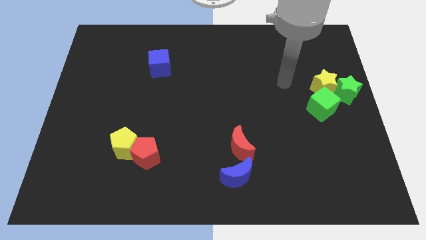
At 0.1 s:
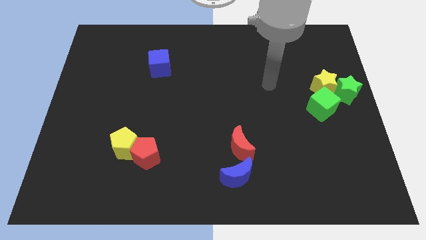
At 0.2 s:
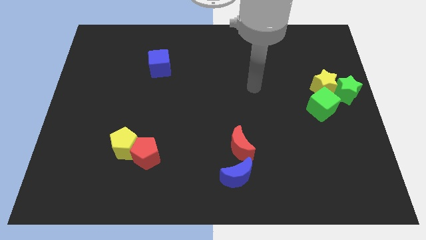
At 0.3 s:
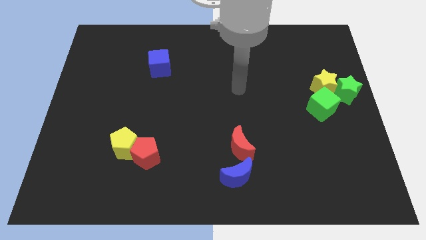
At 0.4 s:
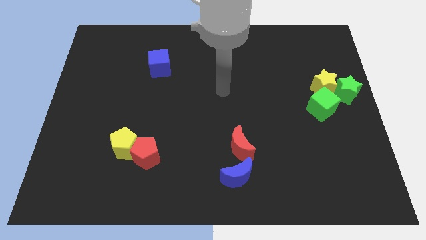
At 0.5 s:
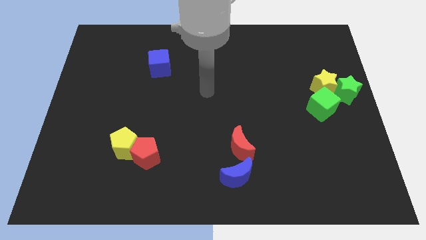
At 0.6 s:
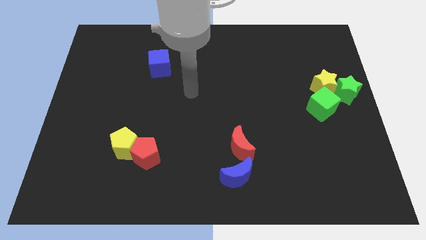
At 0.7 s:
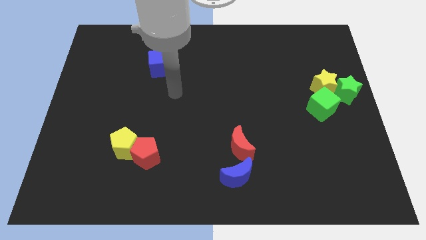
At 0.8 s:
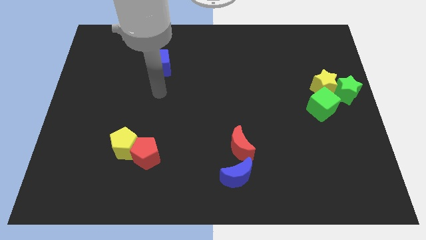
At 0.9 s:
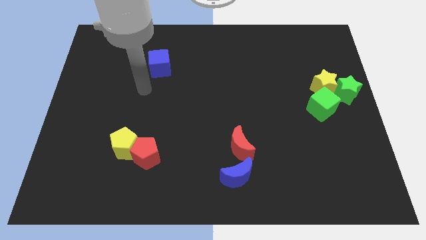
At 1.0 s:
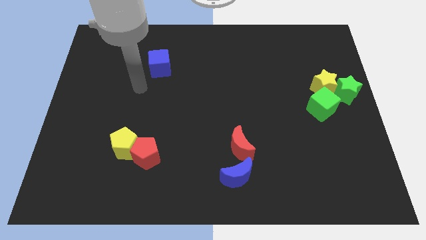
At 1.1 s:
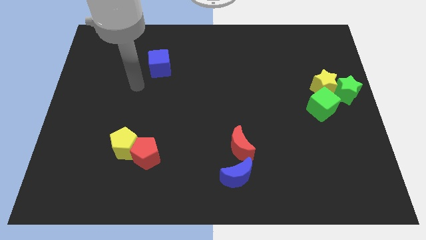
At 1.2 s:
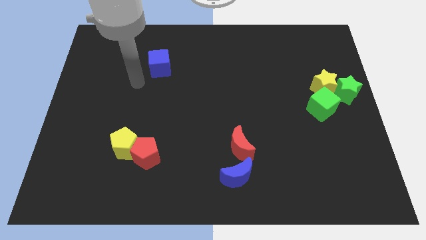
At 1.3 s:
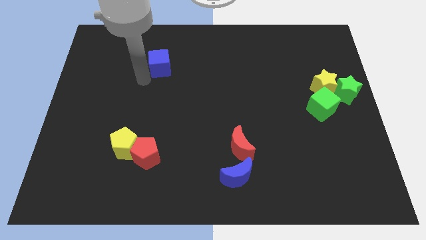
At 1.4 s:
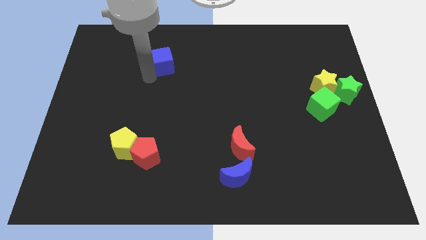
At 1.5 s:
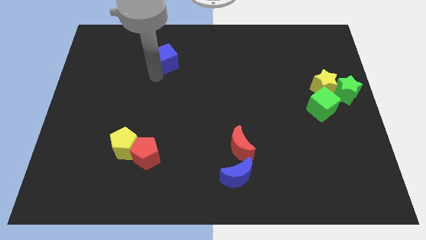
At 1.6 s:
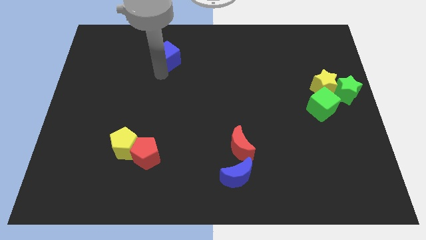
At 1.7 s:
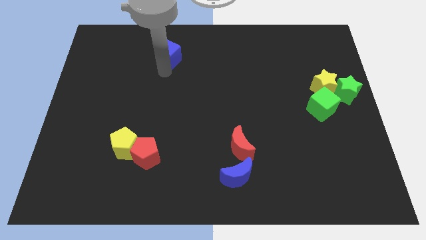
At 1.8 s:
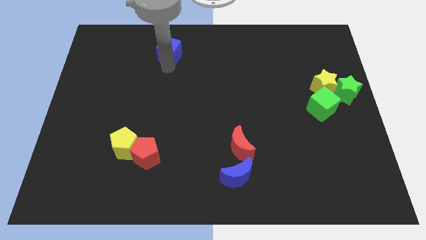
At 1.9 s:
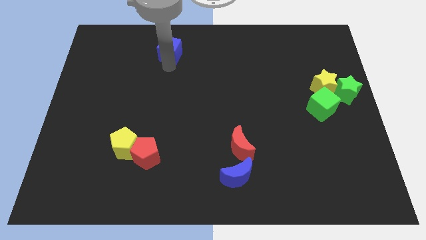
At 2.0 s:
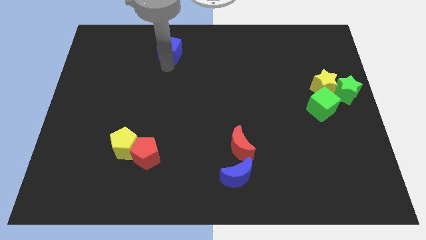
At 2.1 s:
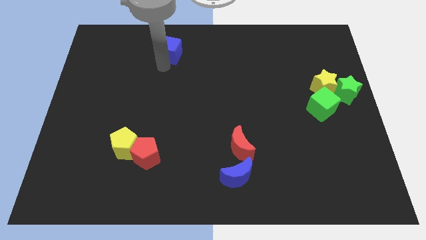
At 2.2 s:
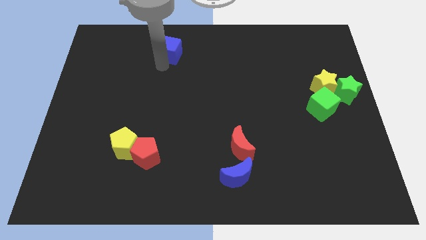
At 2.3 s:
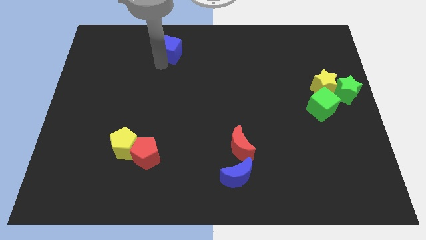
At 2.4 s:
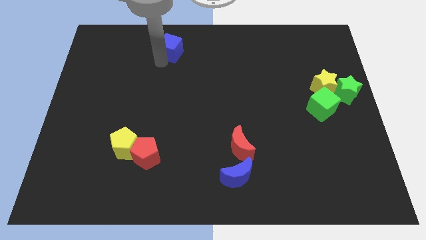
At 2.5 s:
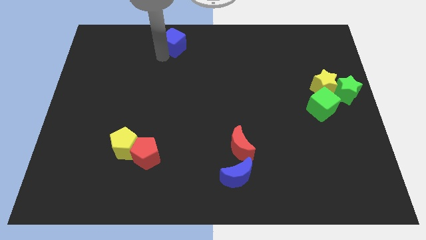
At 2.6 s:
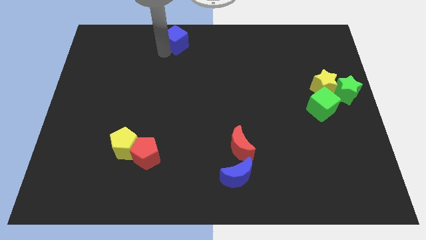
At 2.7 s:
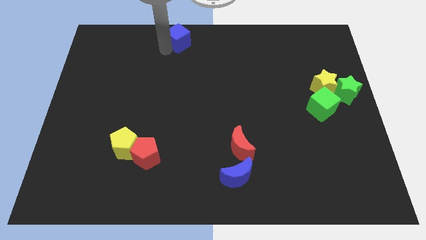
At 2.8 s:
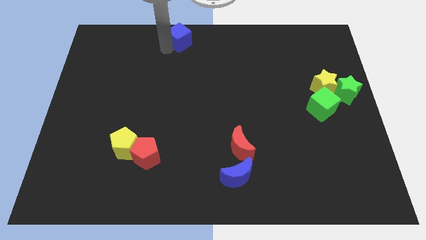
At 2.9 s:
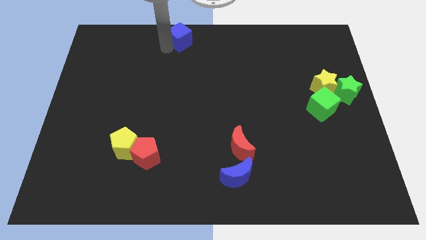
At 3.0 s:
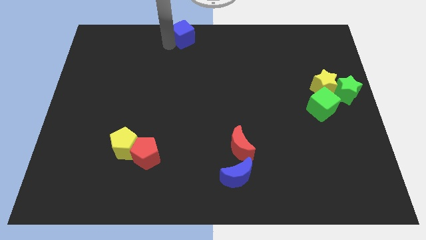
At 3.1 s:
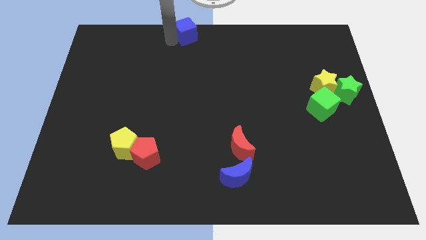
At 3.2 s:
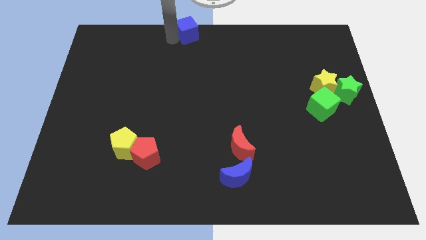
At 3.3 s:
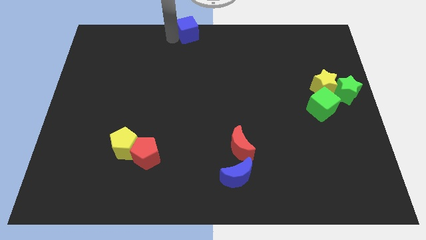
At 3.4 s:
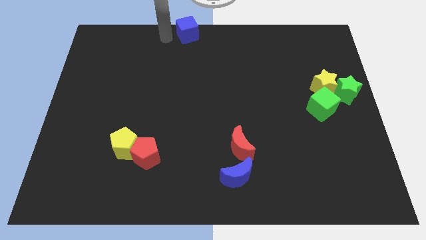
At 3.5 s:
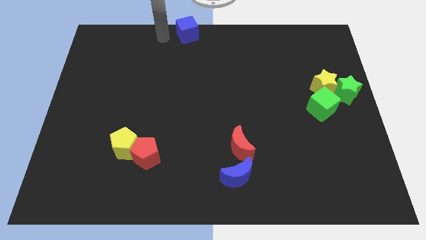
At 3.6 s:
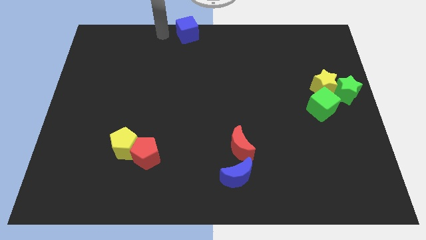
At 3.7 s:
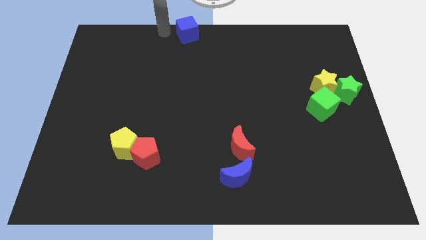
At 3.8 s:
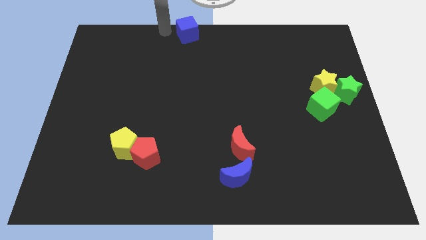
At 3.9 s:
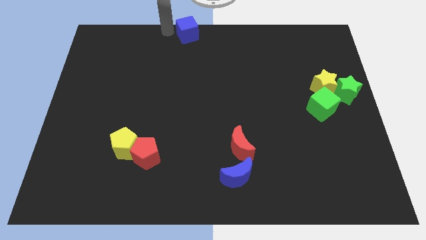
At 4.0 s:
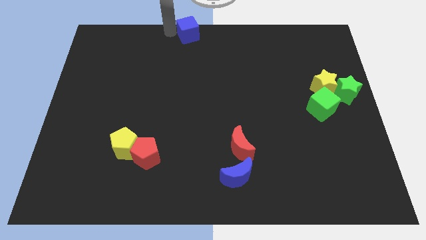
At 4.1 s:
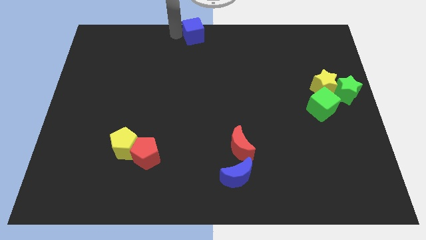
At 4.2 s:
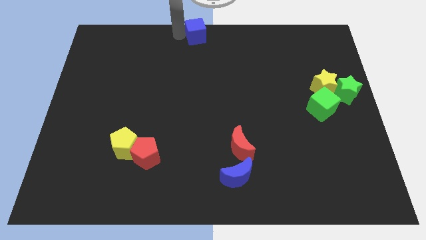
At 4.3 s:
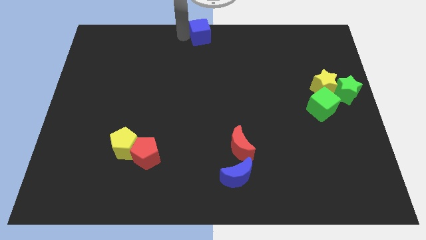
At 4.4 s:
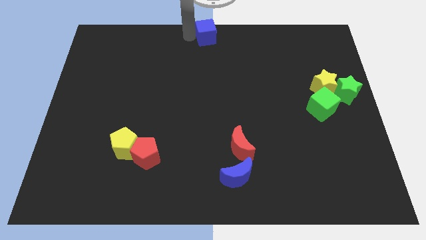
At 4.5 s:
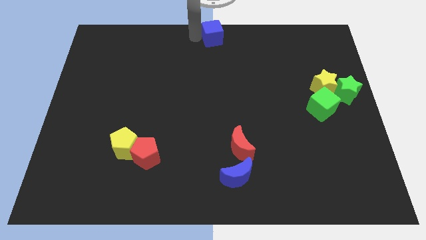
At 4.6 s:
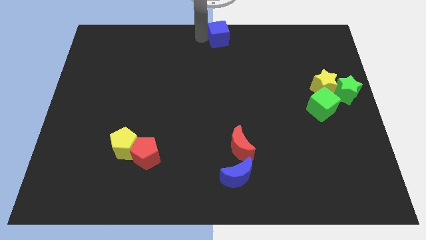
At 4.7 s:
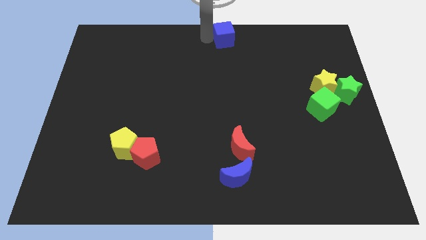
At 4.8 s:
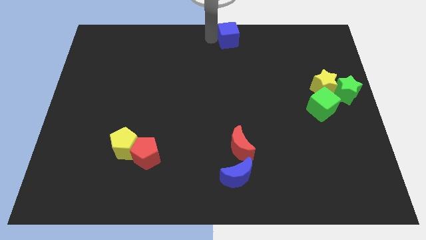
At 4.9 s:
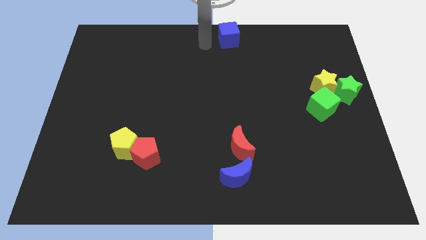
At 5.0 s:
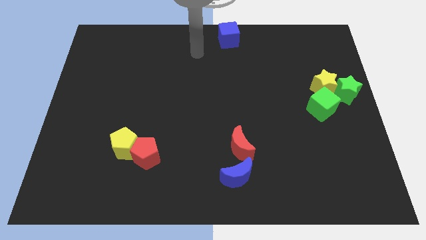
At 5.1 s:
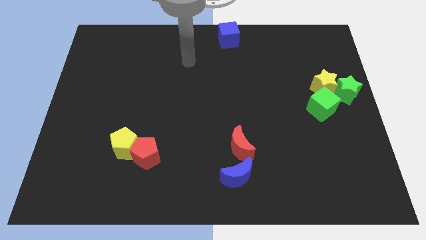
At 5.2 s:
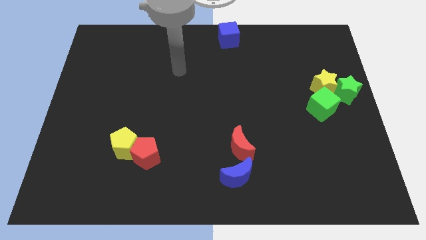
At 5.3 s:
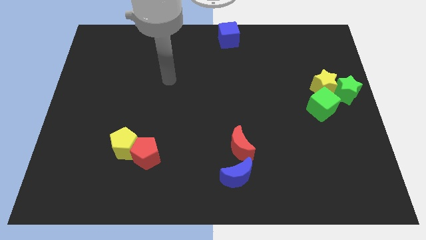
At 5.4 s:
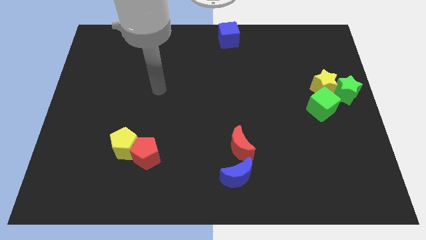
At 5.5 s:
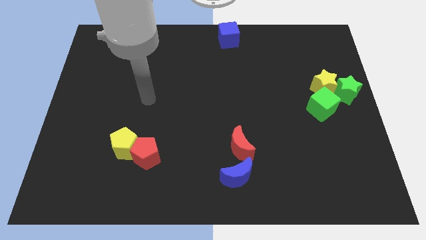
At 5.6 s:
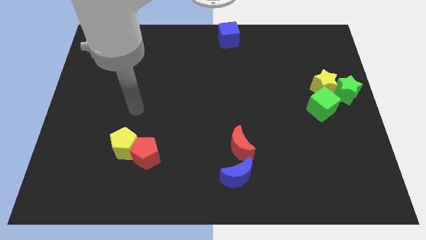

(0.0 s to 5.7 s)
place the blue cube at the top center of the board

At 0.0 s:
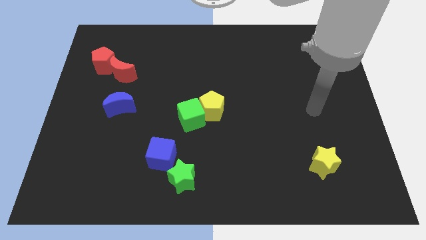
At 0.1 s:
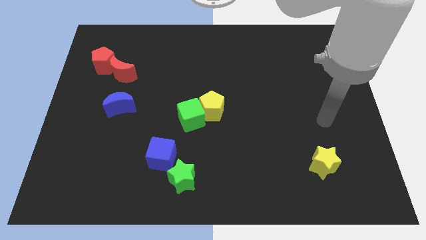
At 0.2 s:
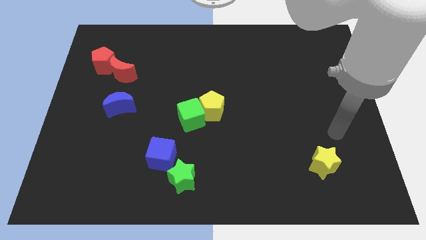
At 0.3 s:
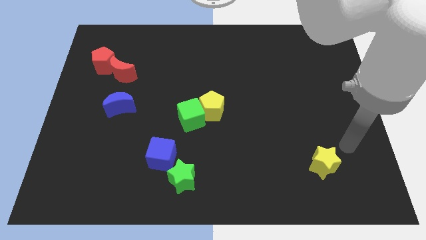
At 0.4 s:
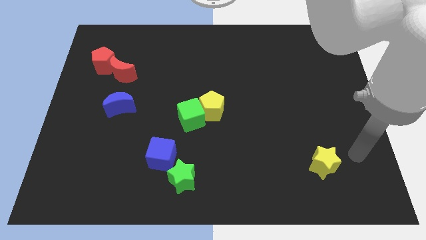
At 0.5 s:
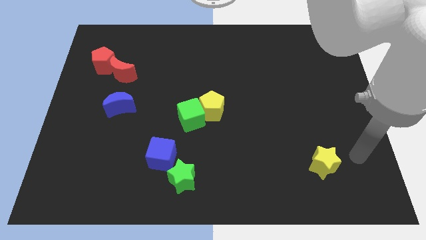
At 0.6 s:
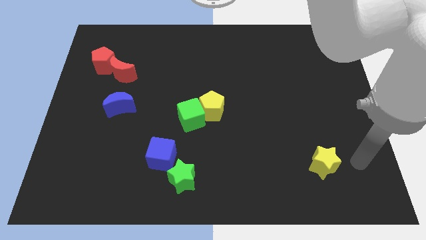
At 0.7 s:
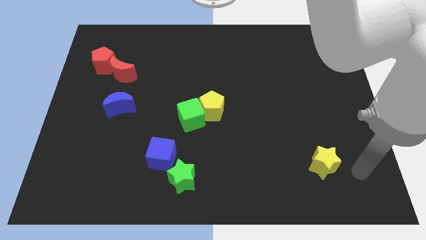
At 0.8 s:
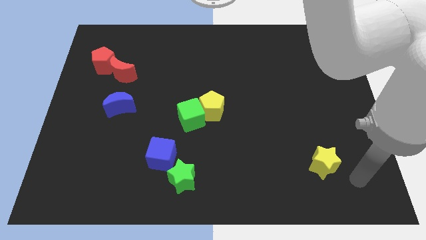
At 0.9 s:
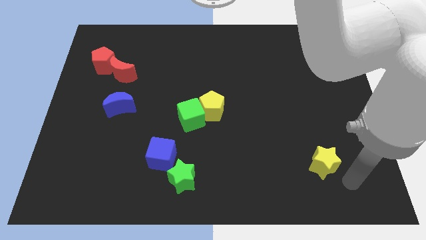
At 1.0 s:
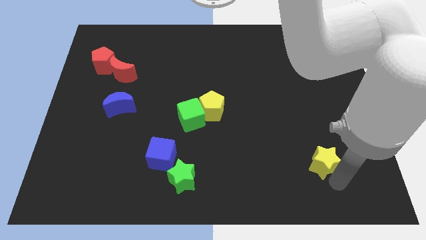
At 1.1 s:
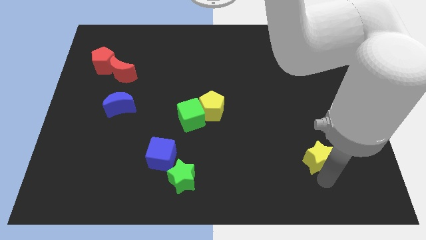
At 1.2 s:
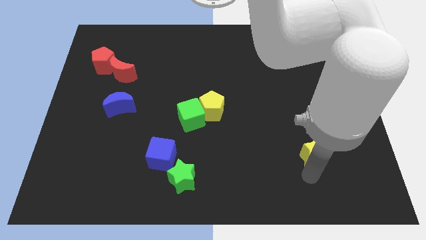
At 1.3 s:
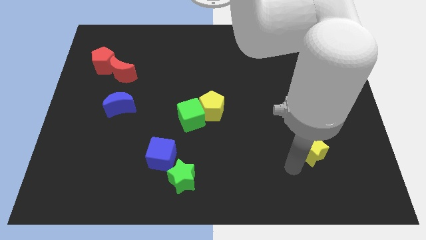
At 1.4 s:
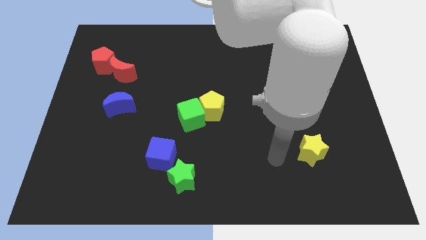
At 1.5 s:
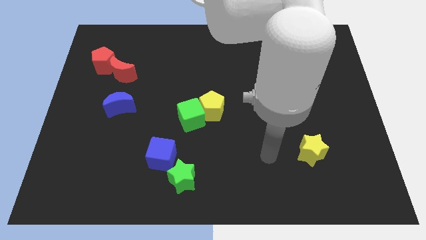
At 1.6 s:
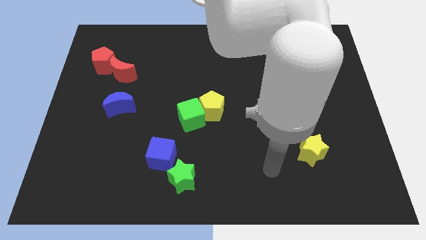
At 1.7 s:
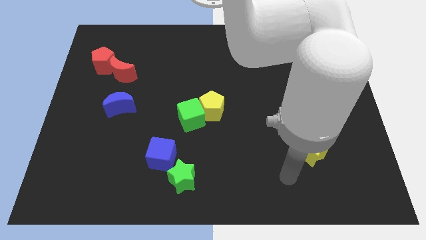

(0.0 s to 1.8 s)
move the yellow star slightly up

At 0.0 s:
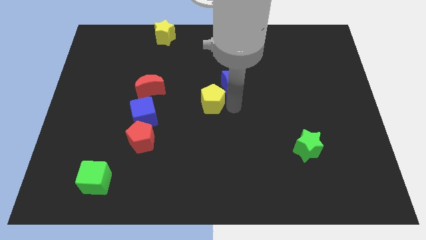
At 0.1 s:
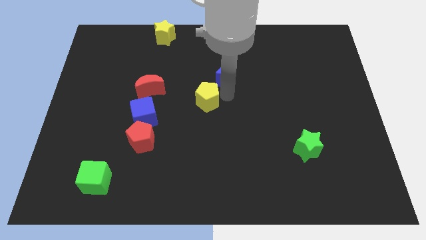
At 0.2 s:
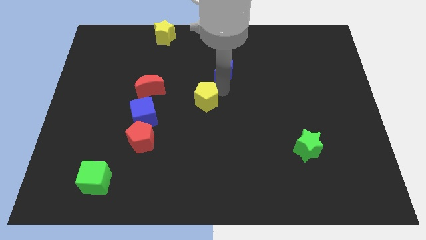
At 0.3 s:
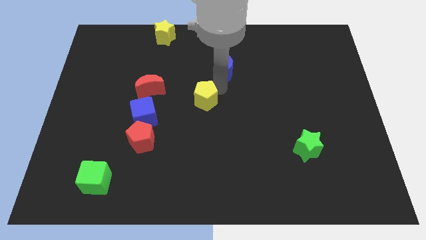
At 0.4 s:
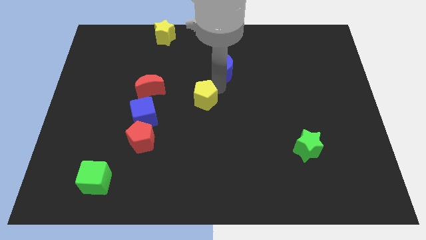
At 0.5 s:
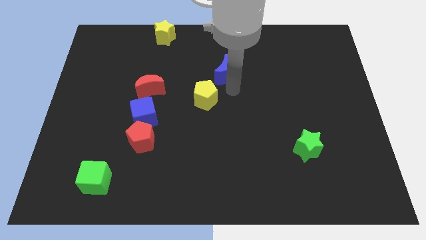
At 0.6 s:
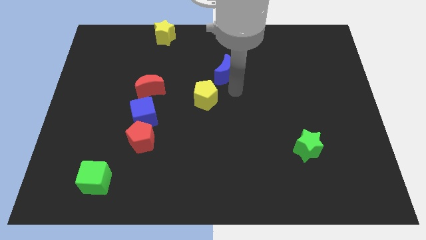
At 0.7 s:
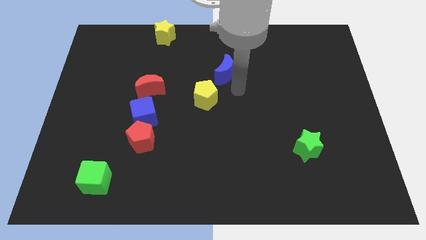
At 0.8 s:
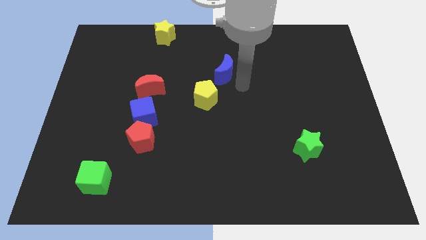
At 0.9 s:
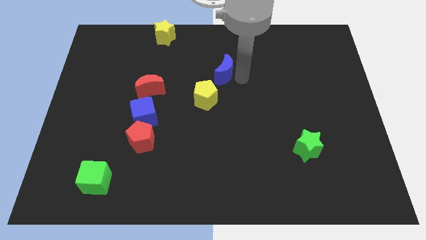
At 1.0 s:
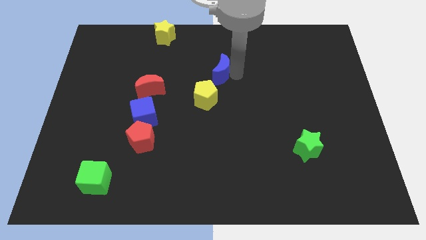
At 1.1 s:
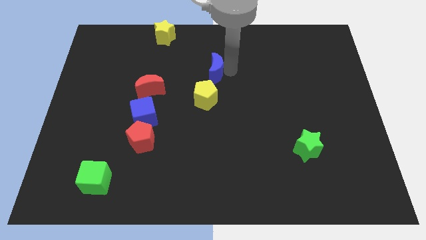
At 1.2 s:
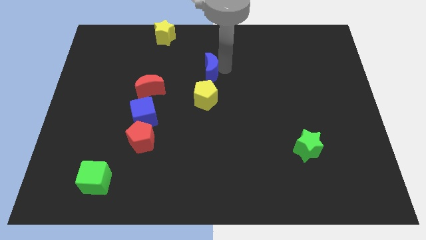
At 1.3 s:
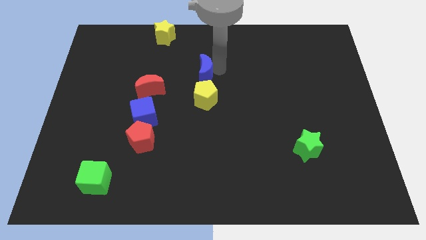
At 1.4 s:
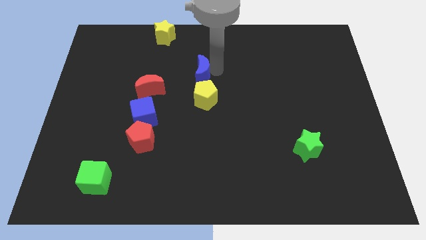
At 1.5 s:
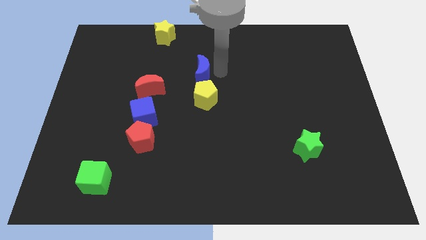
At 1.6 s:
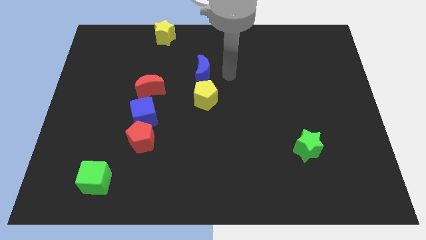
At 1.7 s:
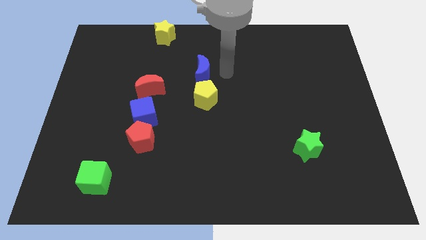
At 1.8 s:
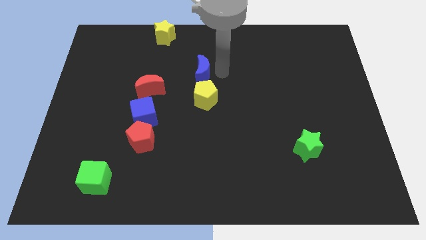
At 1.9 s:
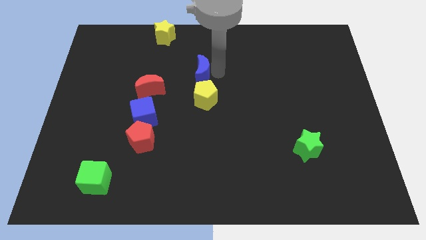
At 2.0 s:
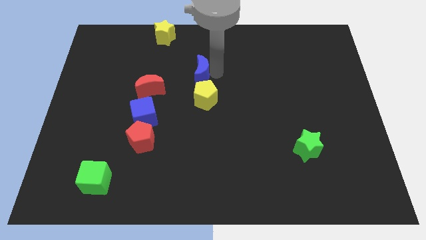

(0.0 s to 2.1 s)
slide blue moon on top of yellow pentagon
